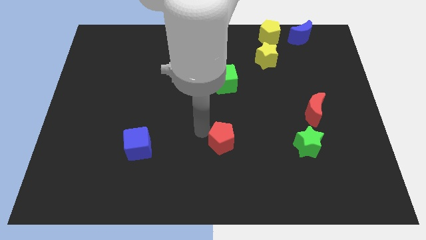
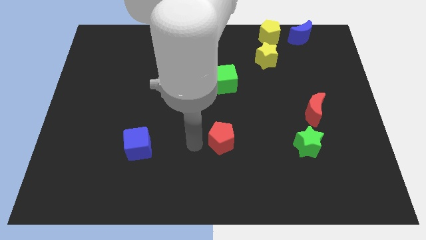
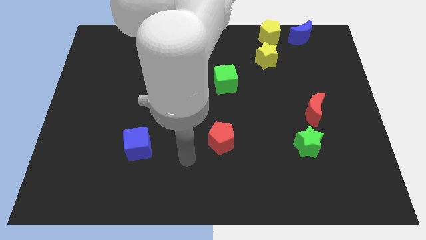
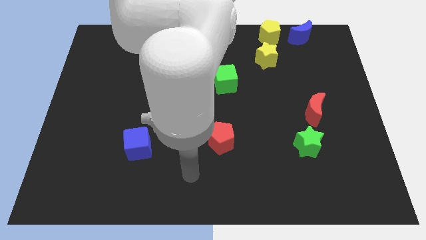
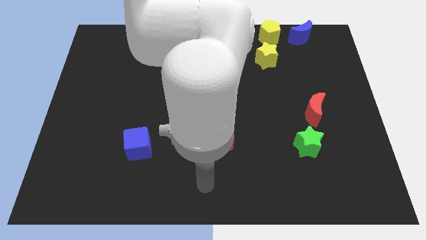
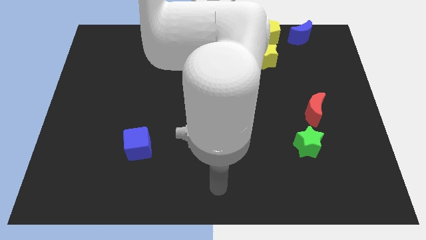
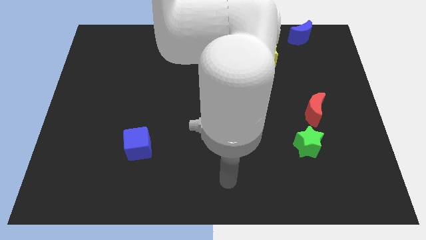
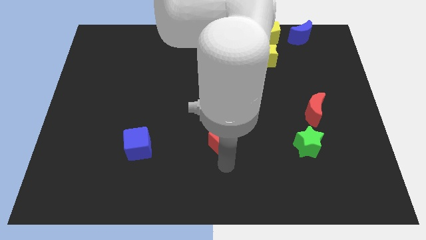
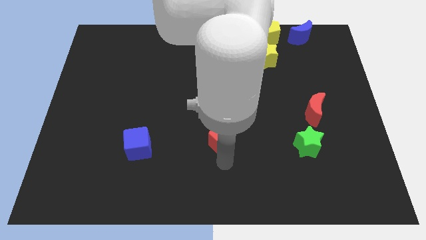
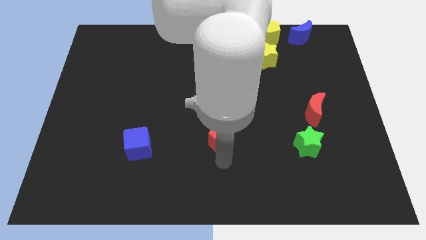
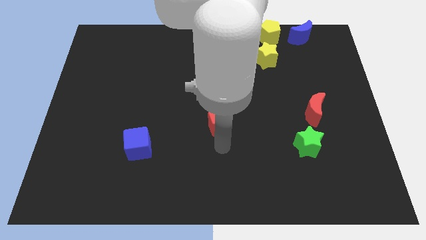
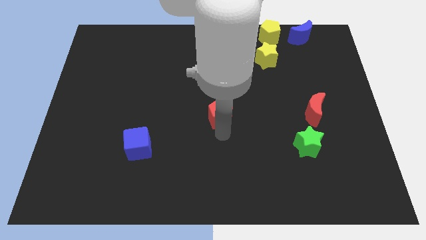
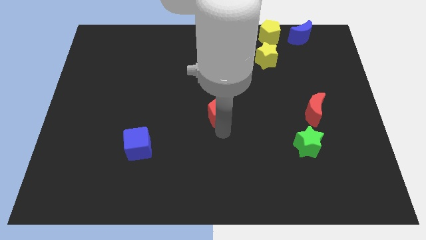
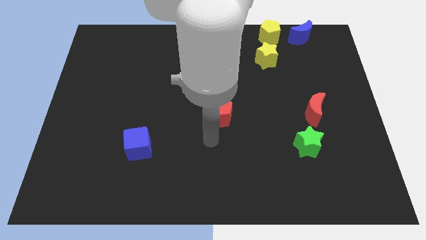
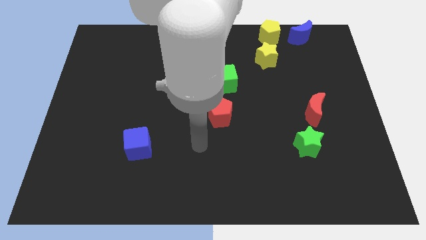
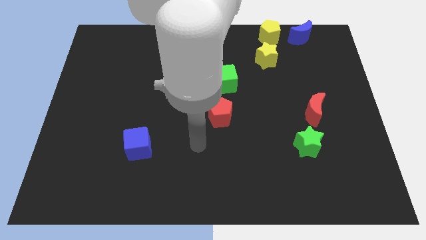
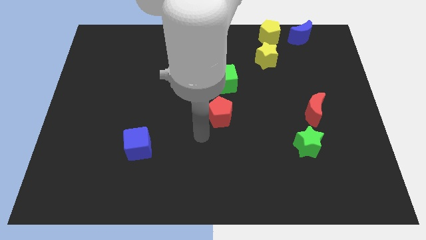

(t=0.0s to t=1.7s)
push the red pentagon to the center of the board

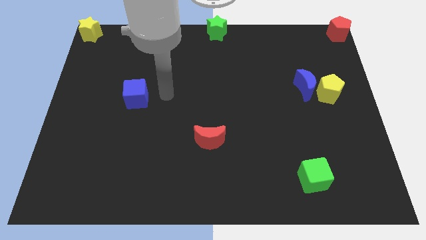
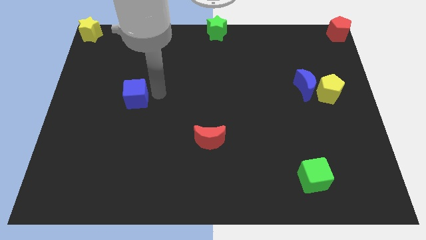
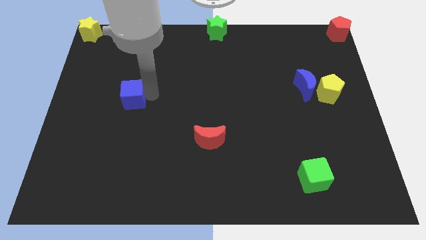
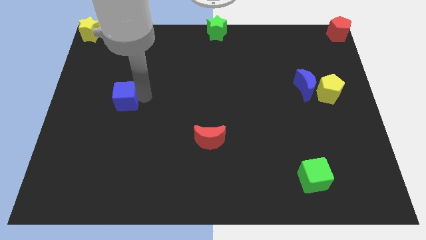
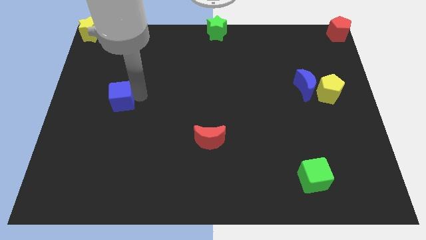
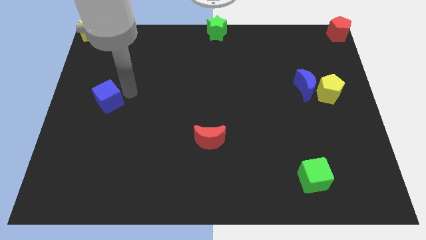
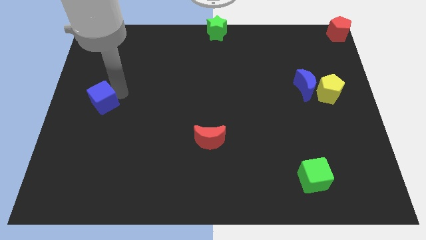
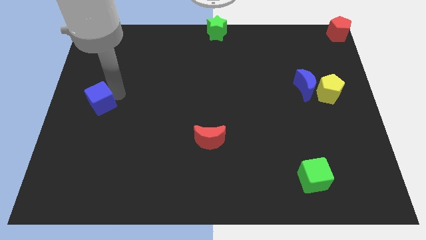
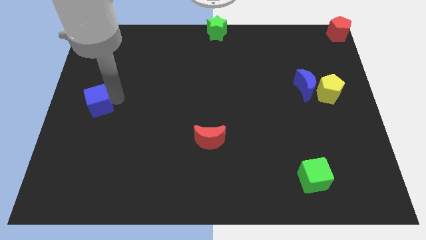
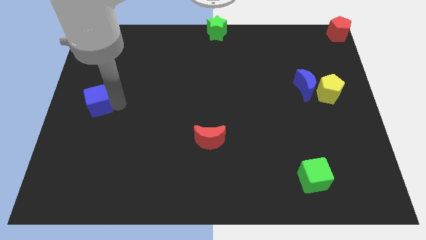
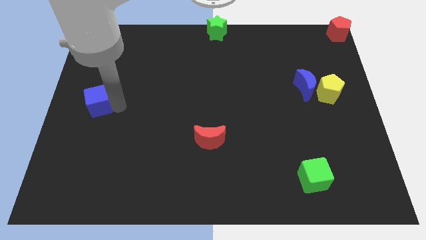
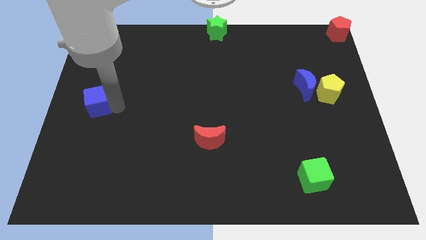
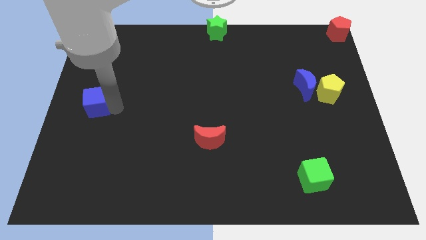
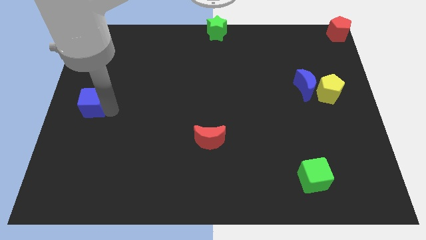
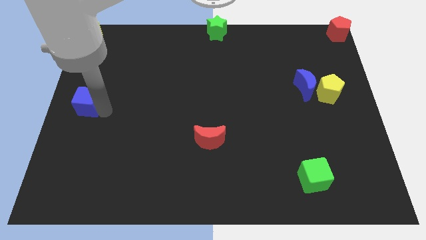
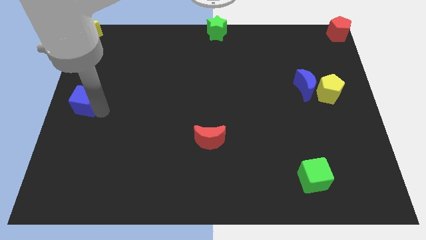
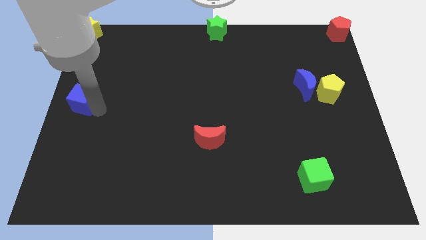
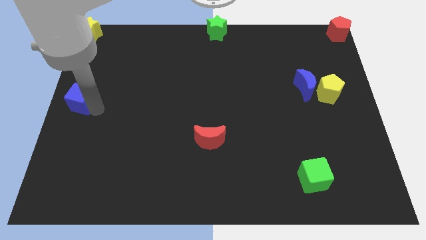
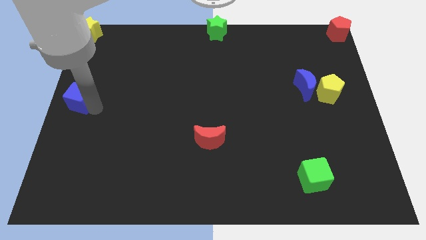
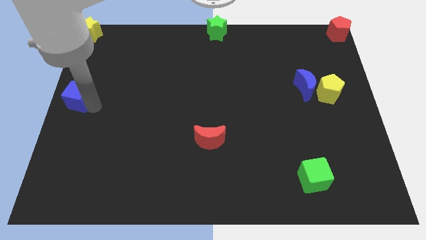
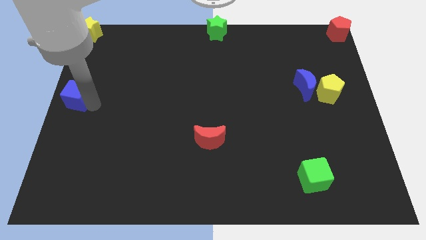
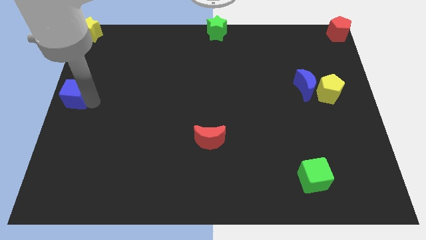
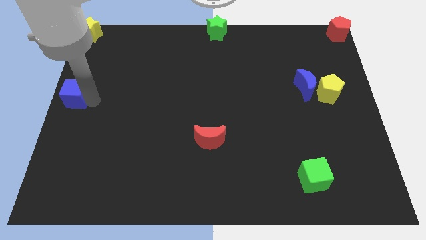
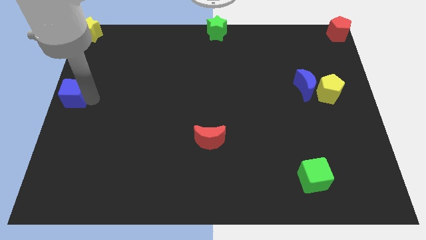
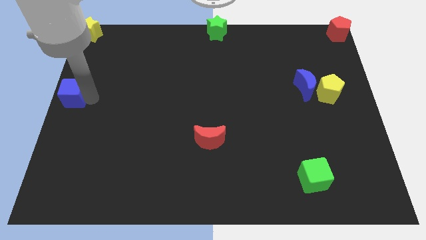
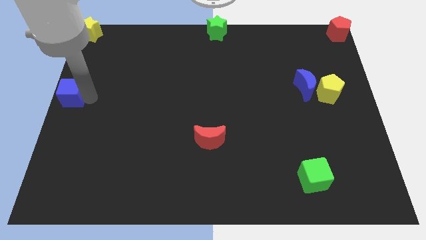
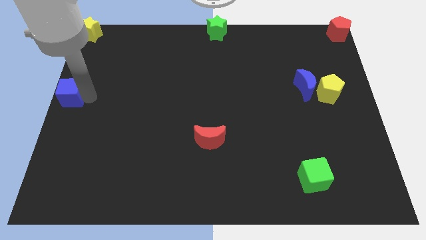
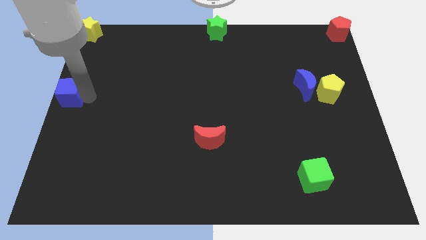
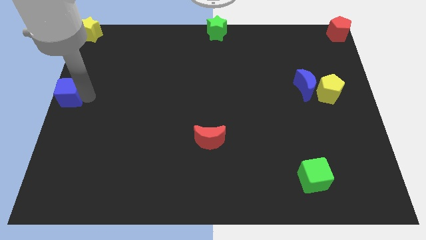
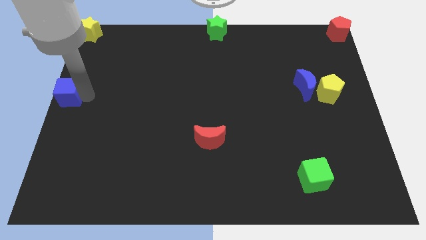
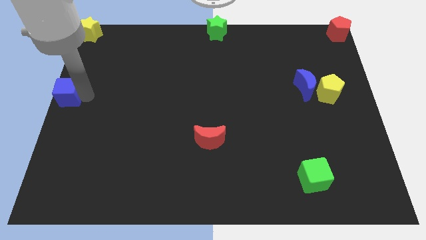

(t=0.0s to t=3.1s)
place the blue cube at the left center of the board

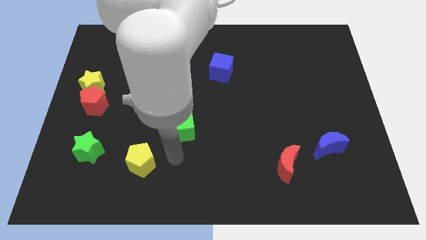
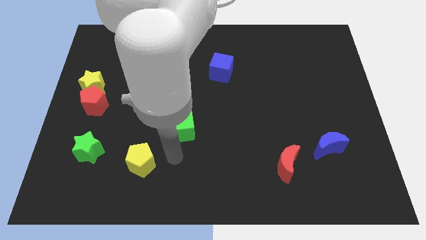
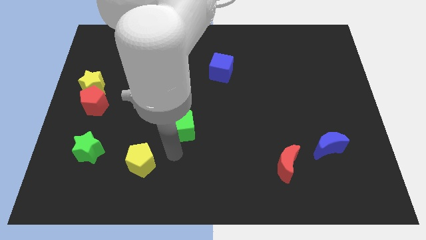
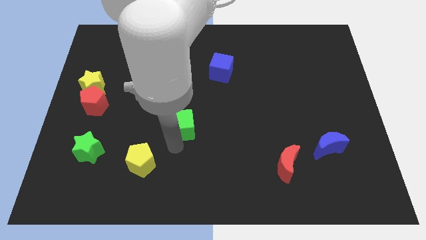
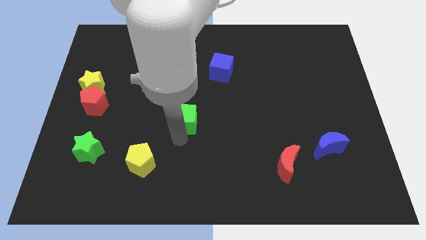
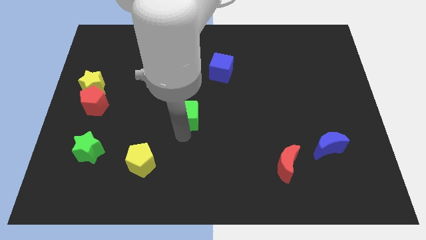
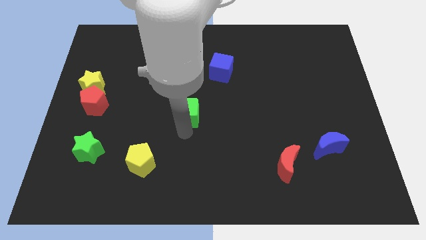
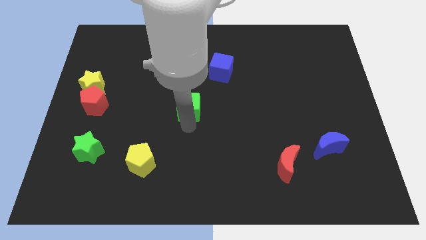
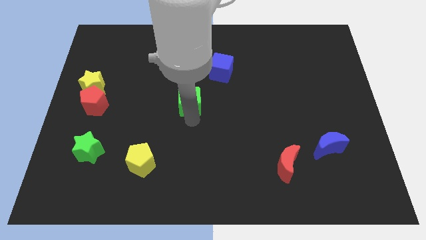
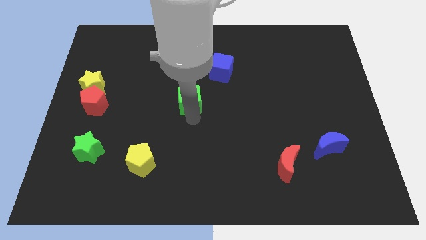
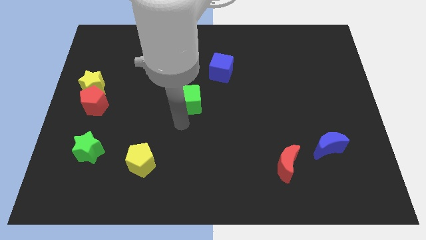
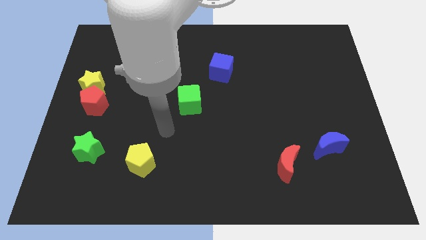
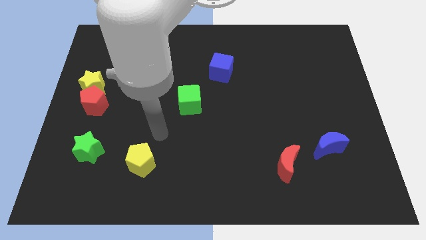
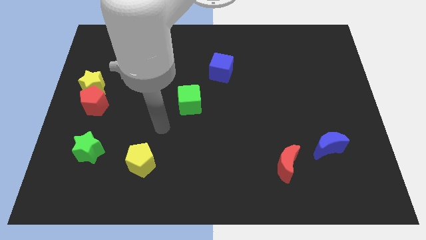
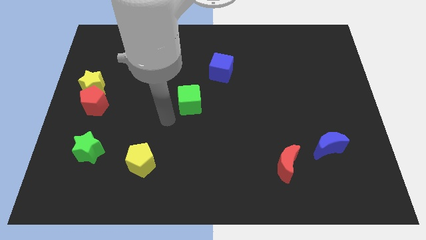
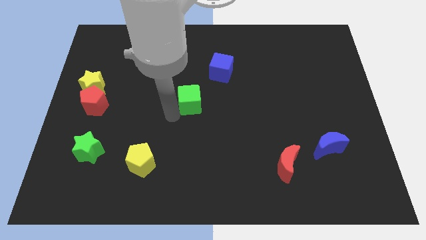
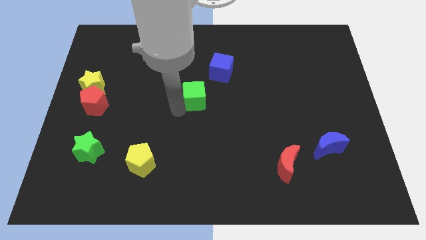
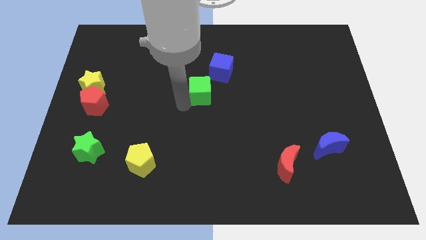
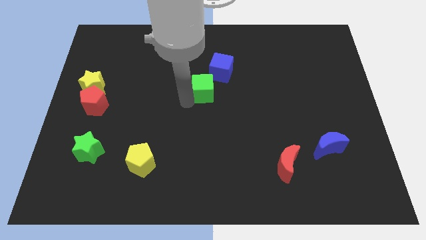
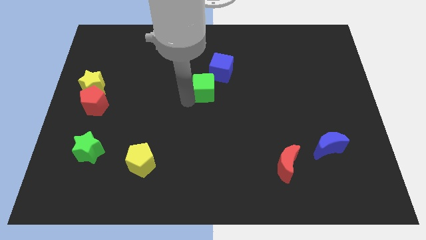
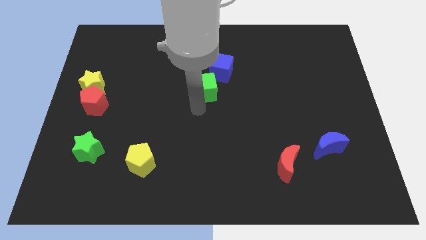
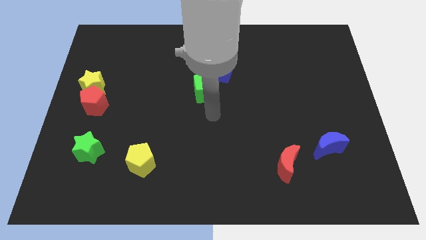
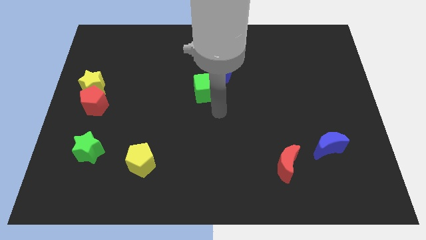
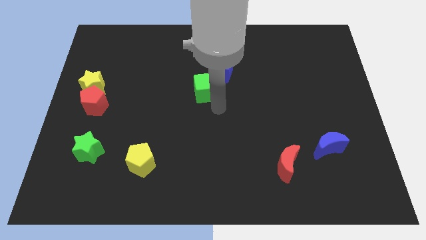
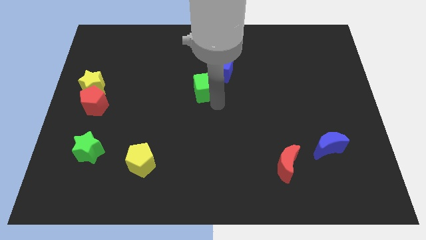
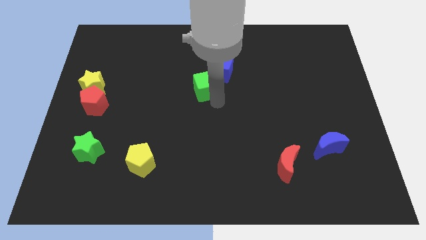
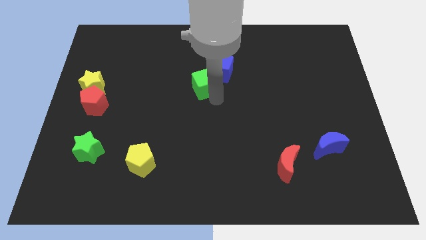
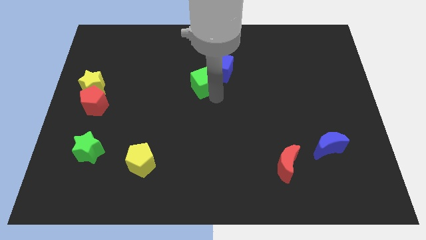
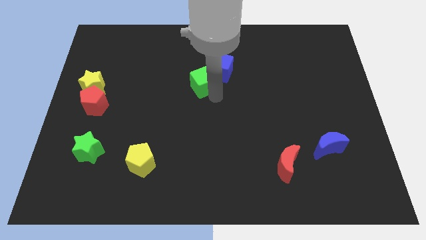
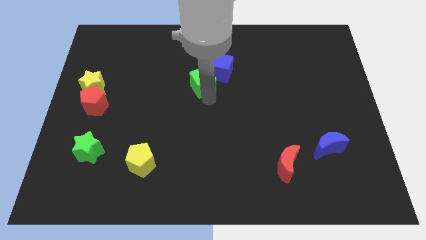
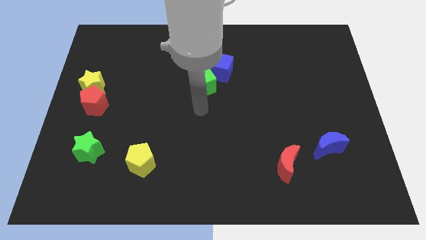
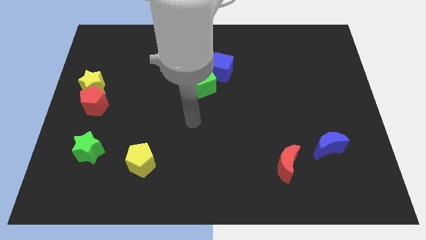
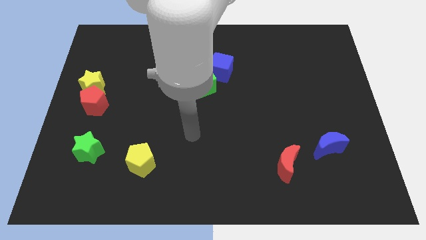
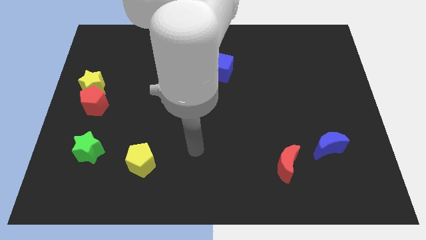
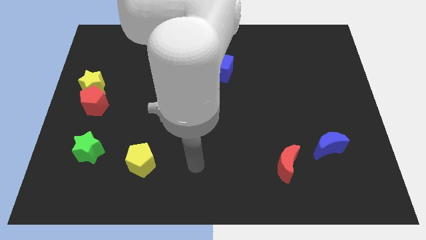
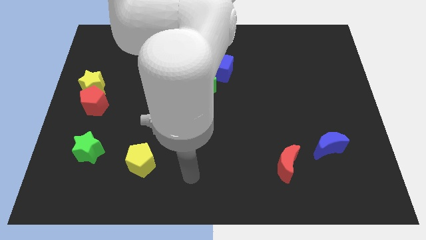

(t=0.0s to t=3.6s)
place green cube in the center

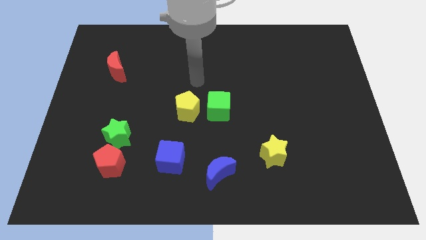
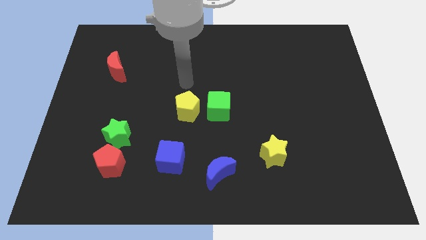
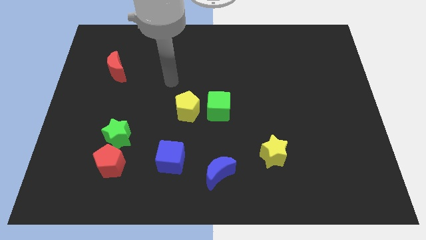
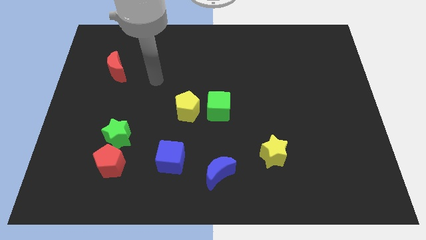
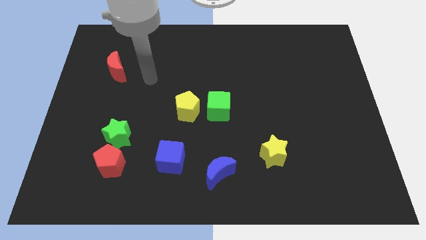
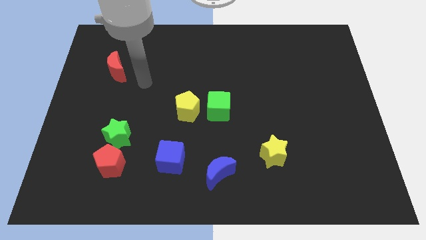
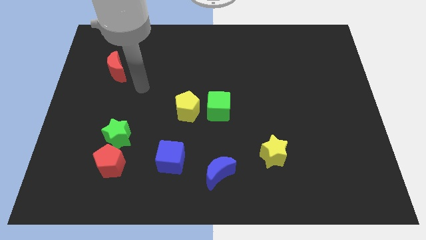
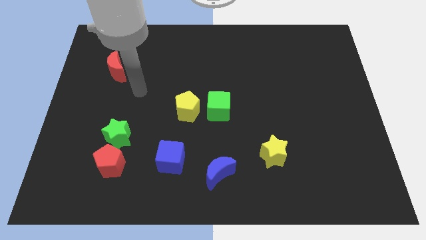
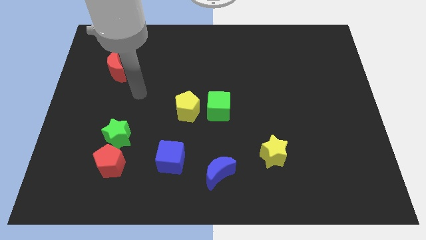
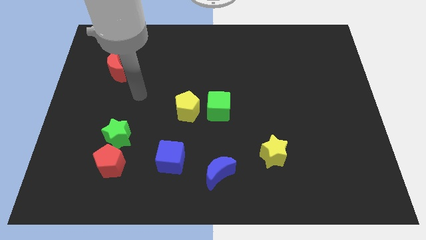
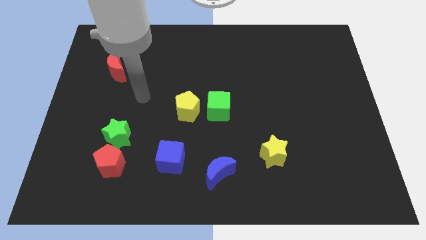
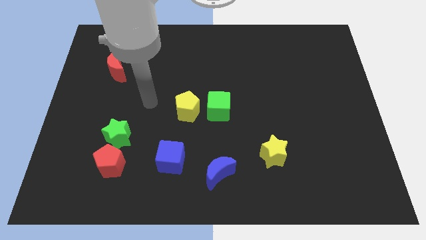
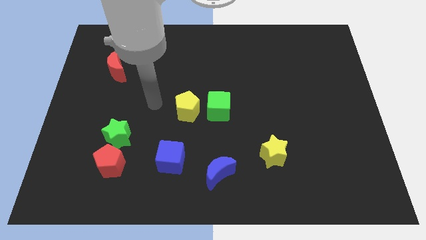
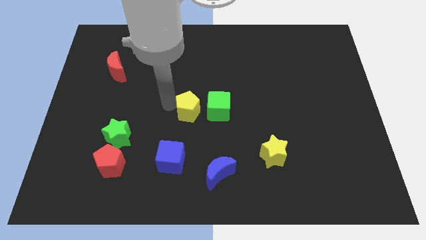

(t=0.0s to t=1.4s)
point your arm to the left side of yellow pentagon
